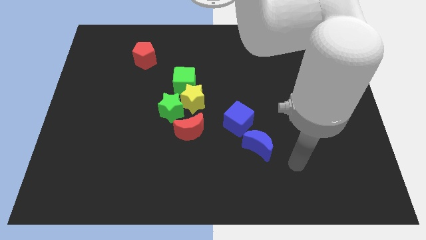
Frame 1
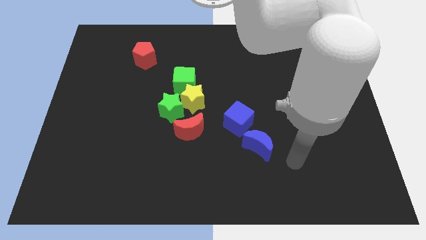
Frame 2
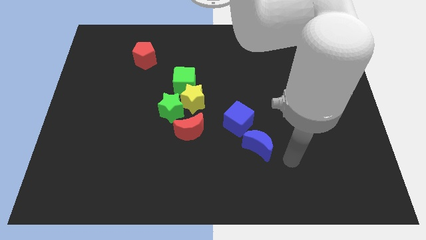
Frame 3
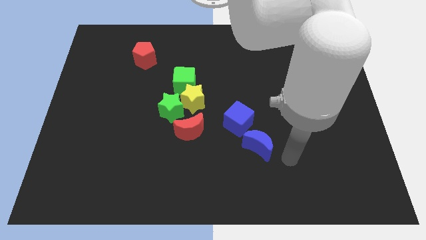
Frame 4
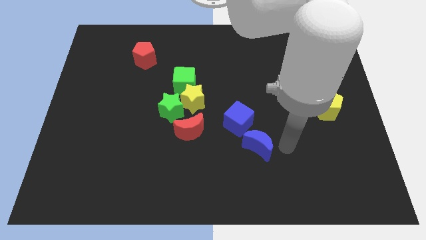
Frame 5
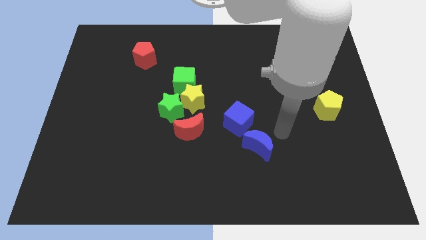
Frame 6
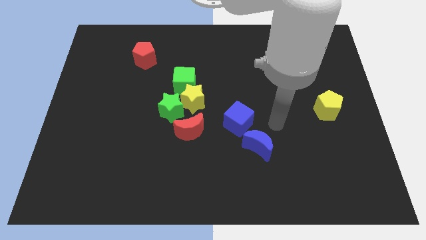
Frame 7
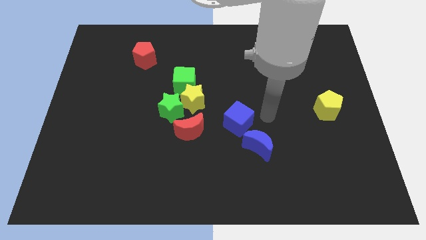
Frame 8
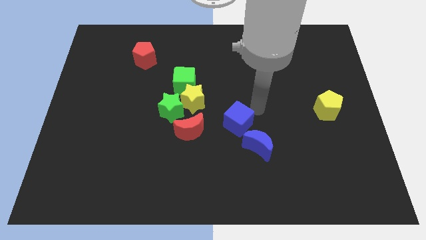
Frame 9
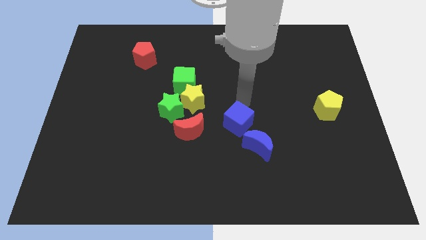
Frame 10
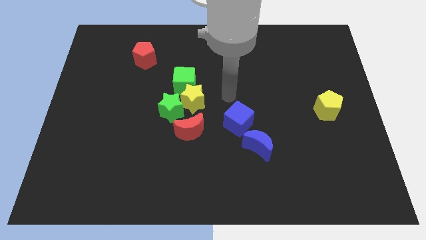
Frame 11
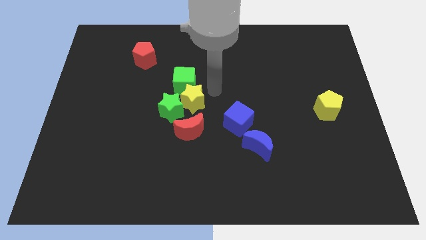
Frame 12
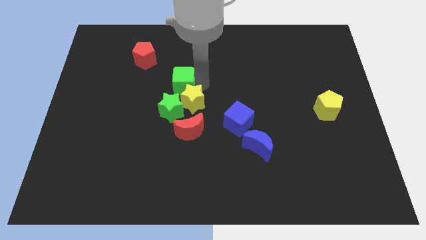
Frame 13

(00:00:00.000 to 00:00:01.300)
move the arm towards the green cube

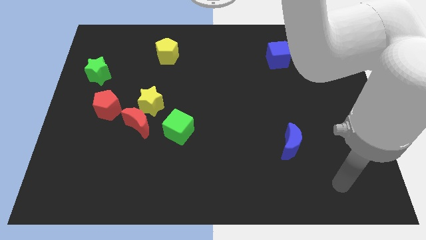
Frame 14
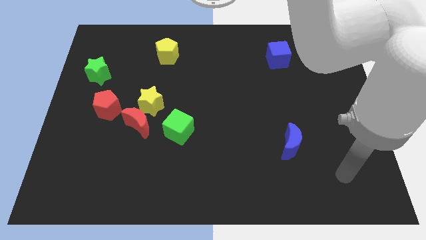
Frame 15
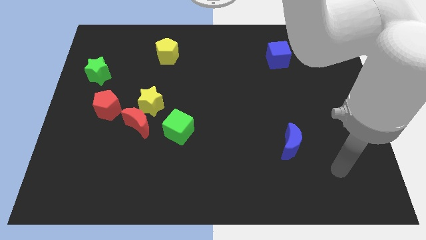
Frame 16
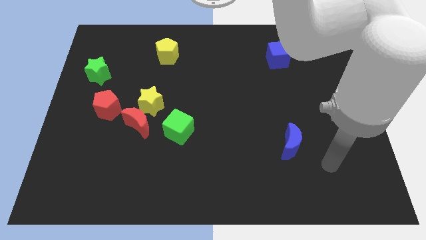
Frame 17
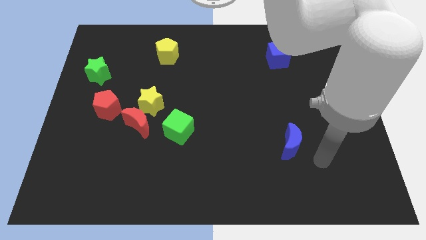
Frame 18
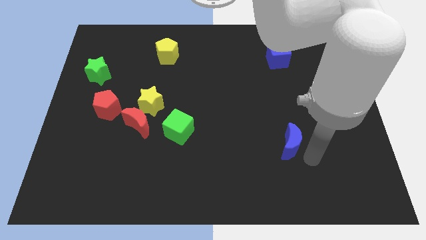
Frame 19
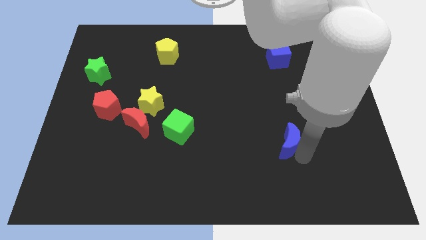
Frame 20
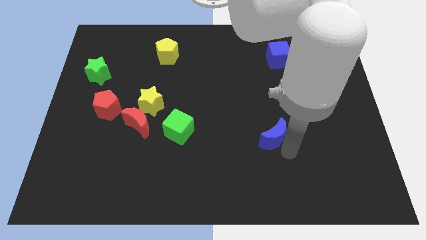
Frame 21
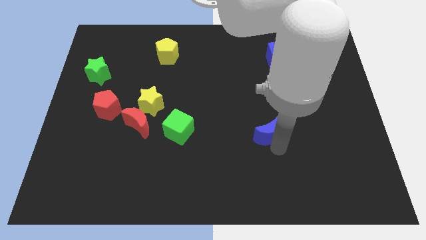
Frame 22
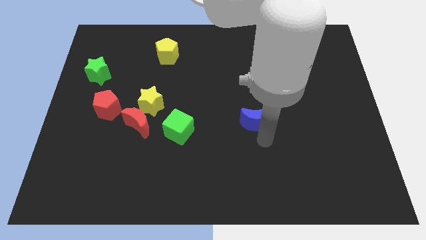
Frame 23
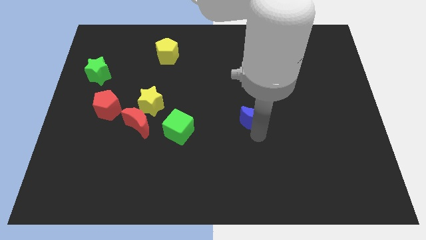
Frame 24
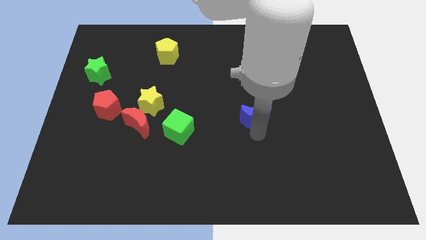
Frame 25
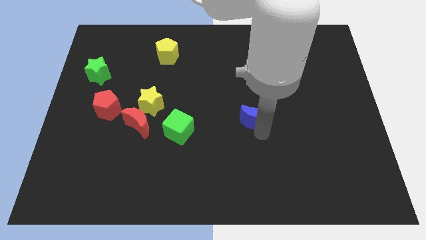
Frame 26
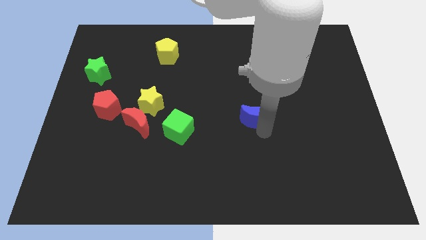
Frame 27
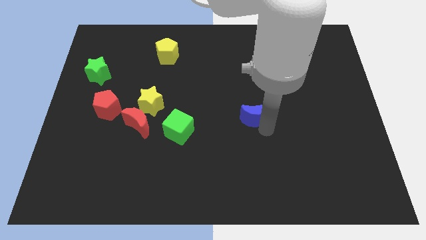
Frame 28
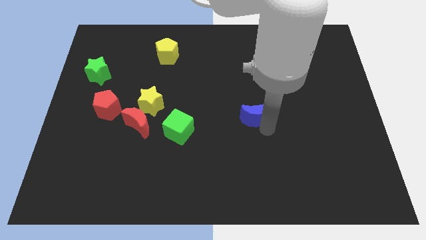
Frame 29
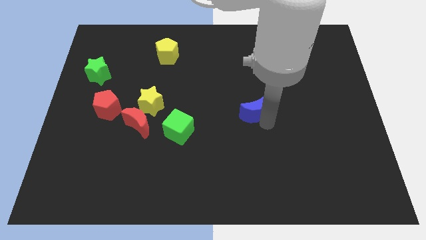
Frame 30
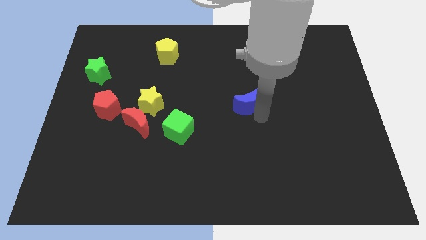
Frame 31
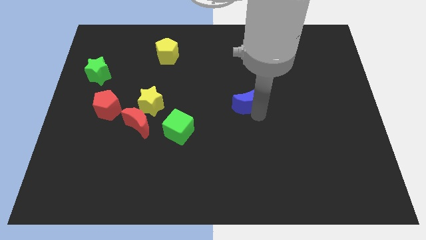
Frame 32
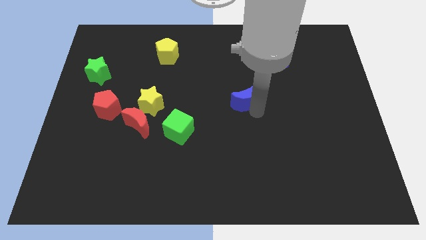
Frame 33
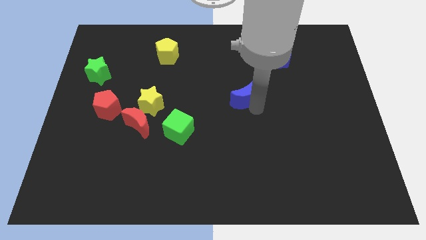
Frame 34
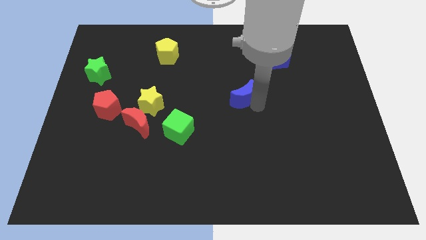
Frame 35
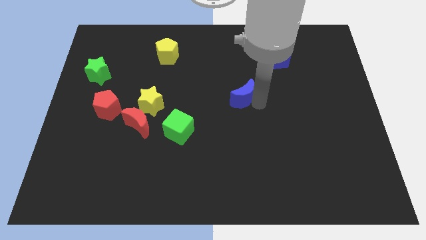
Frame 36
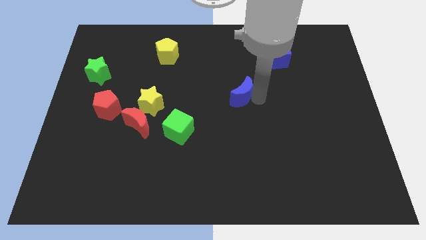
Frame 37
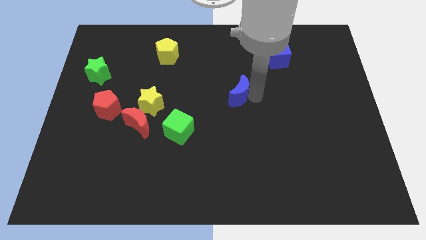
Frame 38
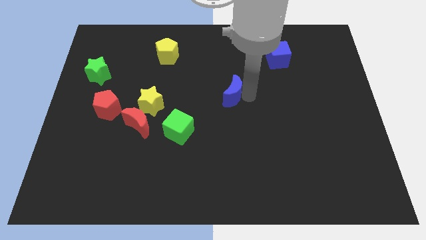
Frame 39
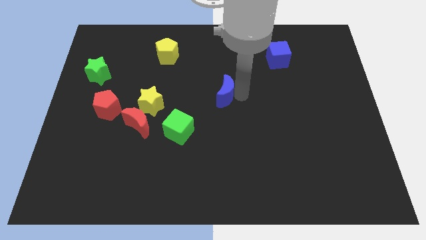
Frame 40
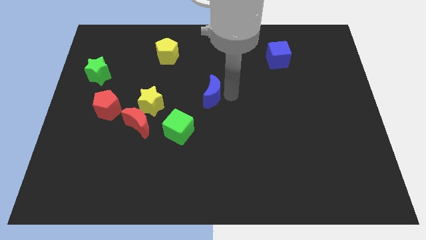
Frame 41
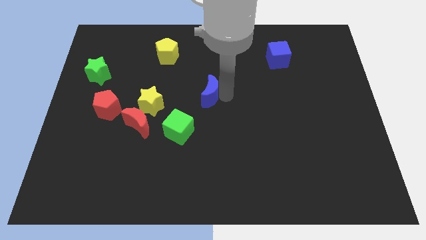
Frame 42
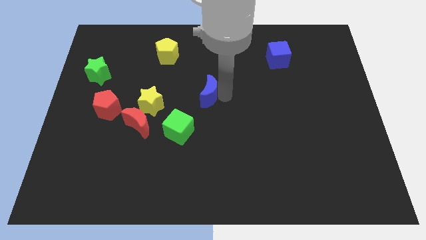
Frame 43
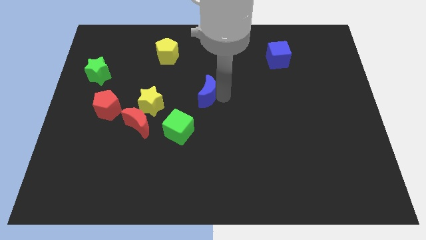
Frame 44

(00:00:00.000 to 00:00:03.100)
push blue crescent diagonally towards green cube

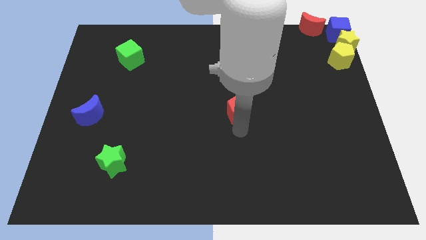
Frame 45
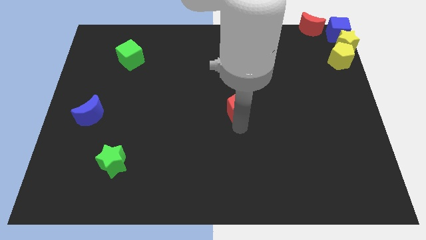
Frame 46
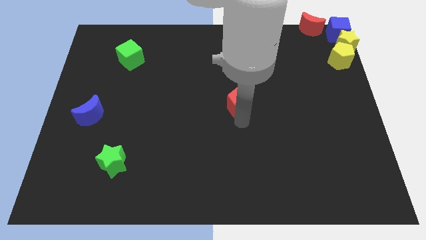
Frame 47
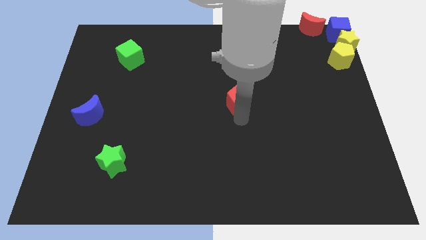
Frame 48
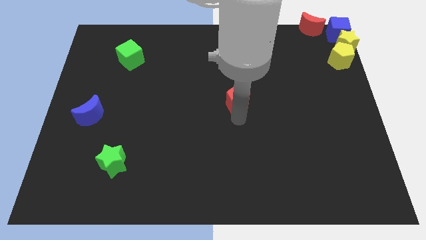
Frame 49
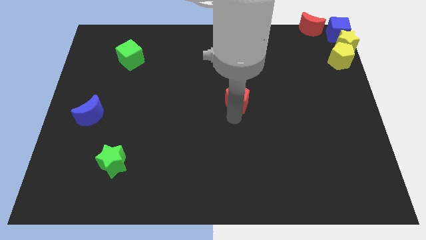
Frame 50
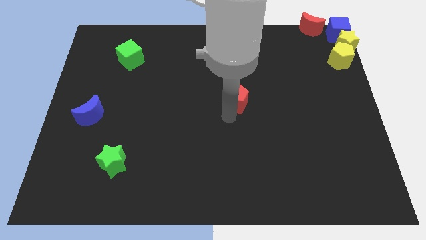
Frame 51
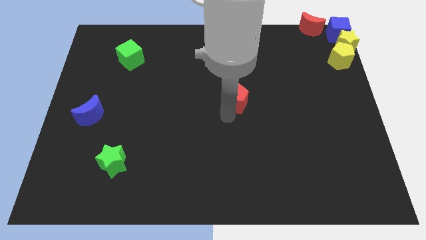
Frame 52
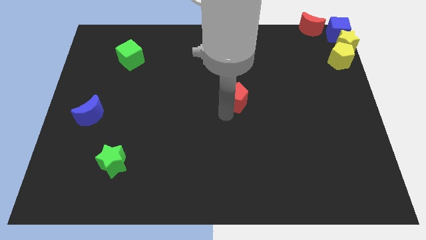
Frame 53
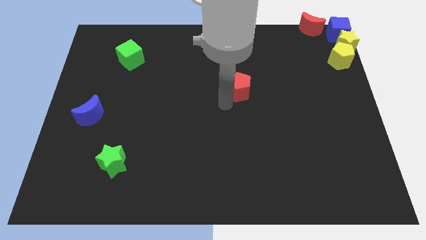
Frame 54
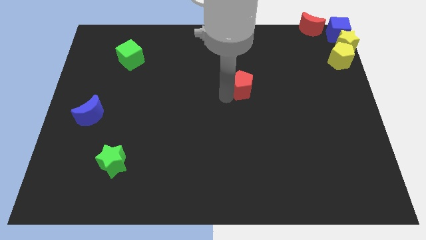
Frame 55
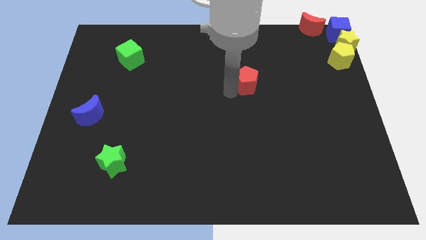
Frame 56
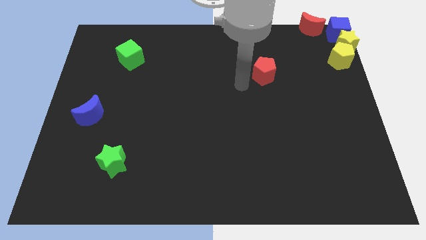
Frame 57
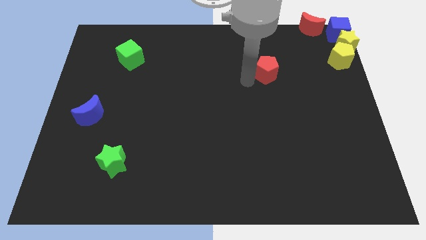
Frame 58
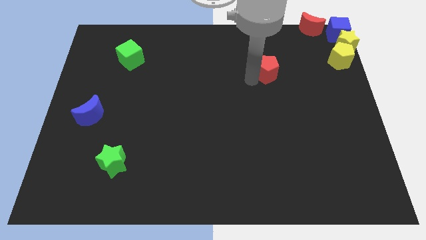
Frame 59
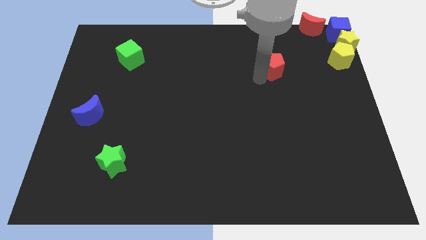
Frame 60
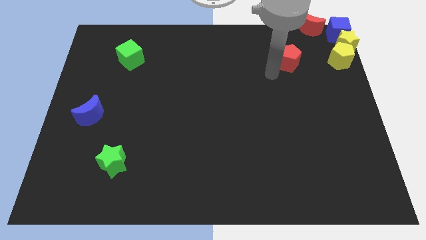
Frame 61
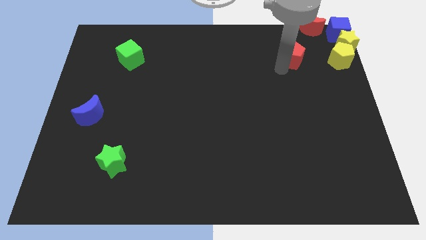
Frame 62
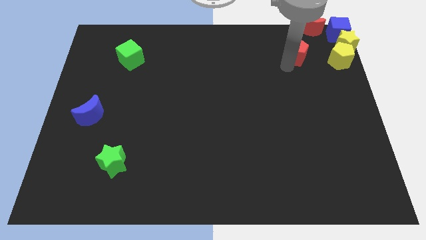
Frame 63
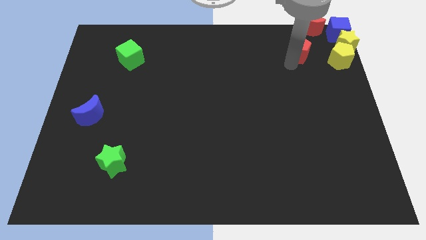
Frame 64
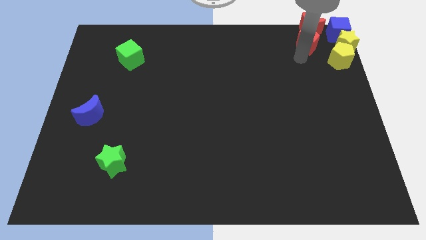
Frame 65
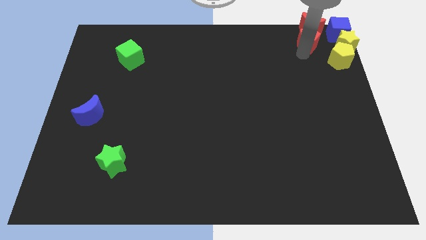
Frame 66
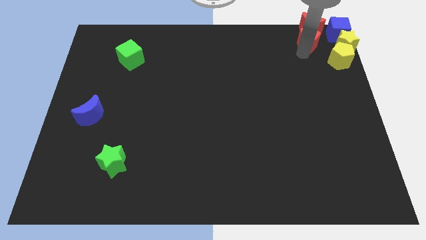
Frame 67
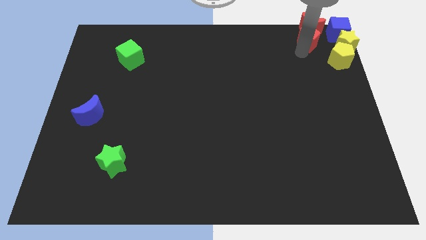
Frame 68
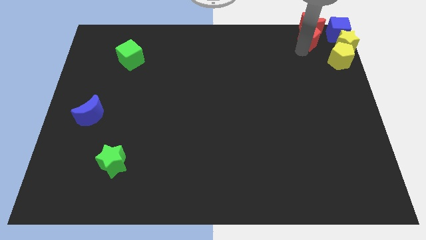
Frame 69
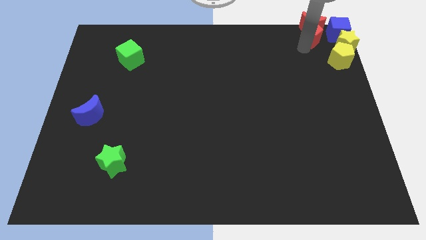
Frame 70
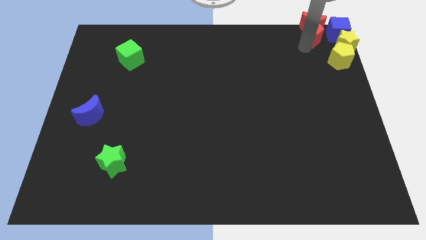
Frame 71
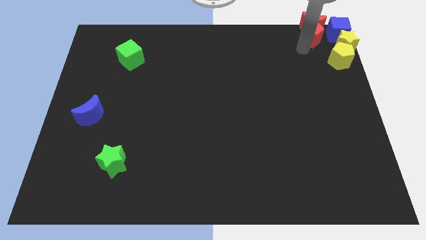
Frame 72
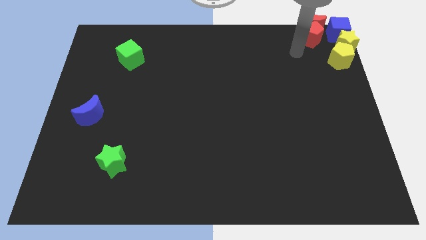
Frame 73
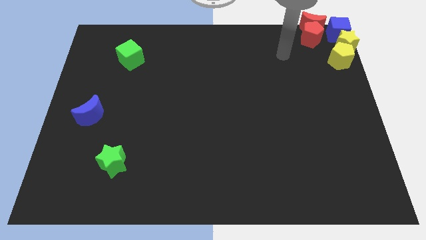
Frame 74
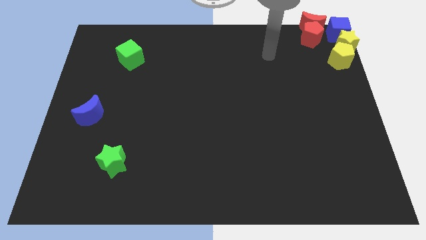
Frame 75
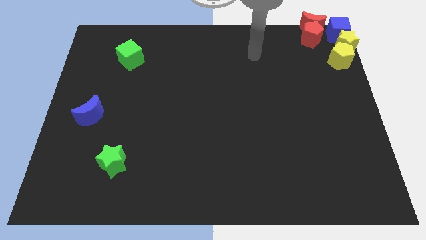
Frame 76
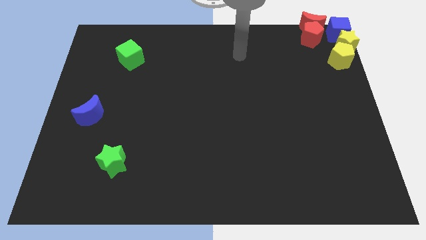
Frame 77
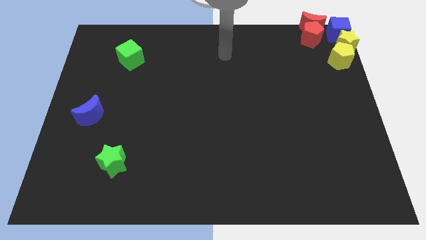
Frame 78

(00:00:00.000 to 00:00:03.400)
place the red pentagon at the bottom of red moon

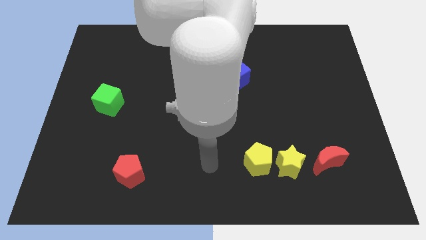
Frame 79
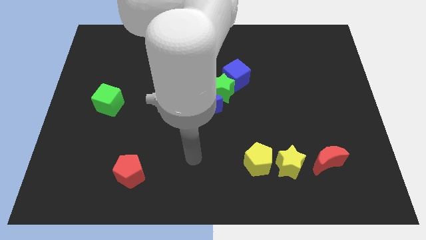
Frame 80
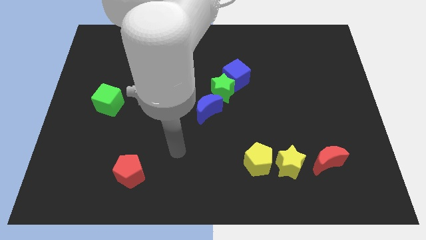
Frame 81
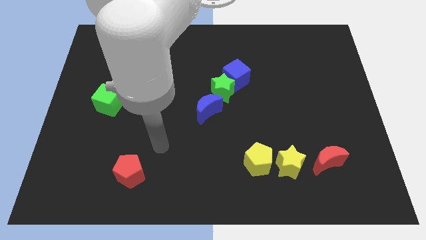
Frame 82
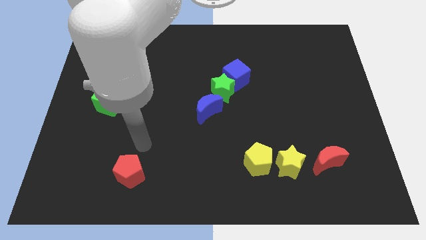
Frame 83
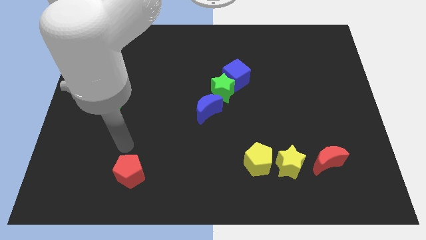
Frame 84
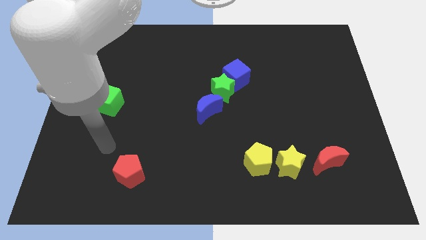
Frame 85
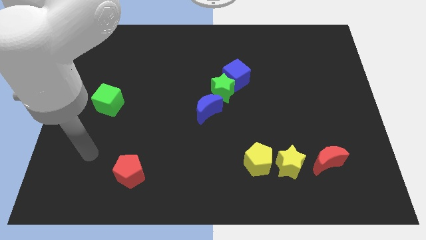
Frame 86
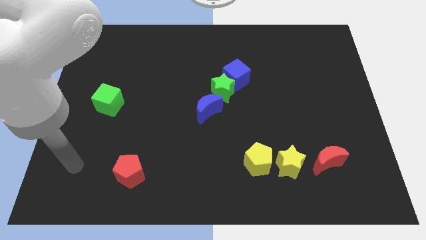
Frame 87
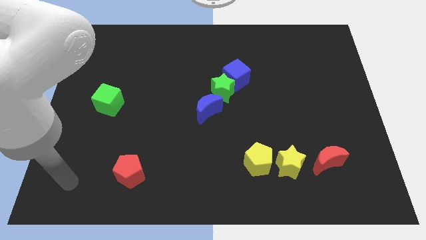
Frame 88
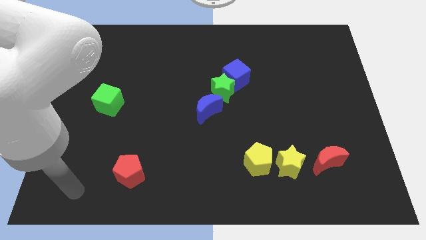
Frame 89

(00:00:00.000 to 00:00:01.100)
move your arm away from the yellow pentagon

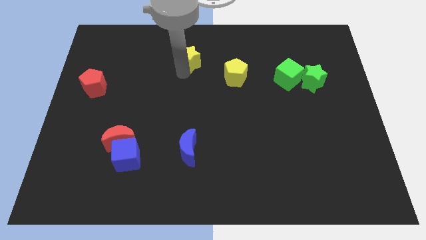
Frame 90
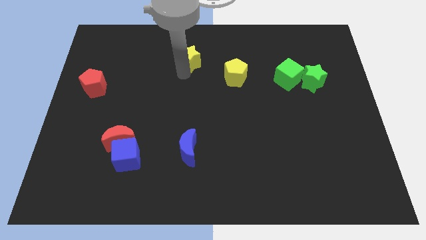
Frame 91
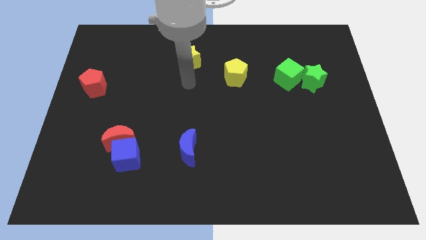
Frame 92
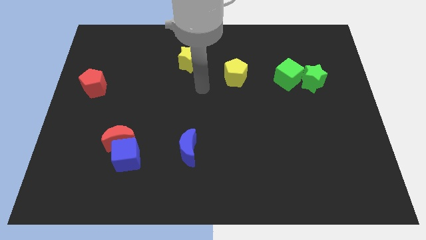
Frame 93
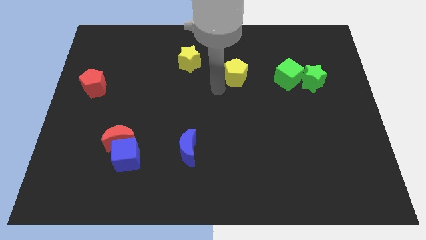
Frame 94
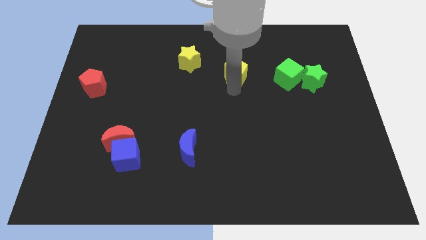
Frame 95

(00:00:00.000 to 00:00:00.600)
move your hand to the bottom of the yellow pentagon
